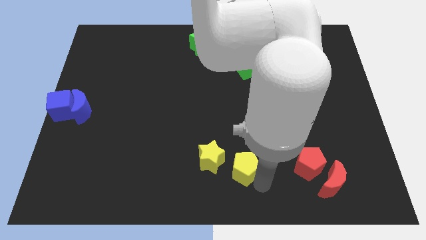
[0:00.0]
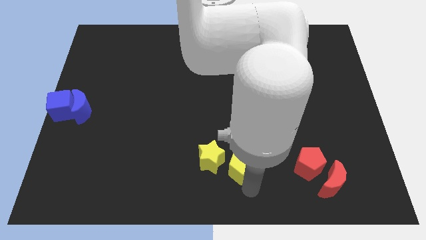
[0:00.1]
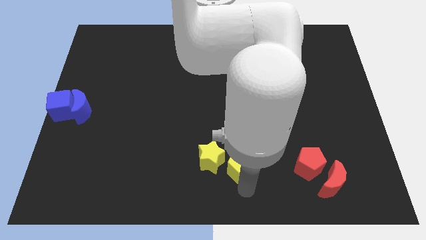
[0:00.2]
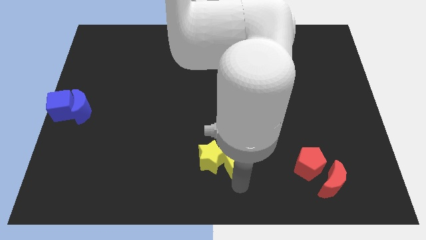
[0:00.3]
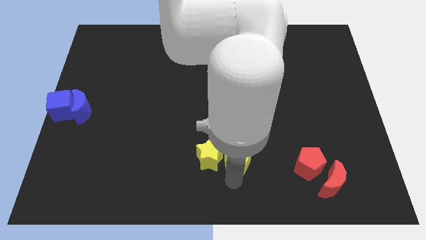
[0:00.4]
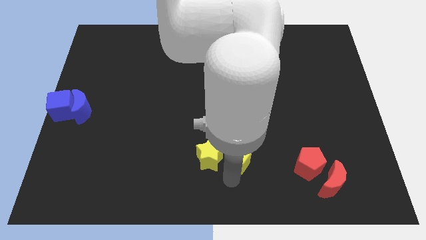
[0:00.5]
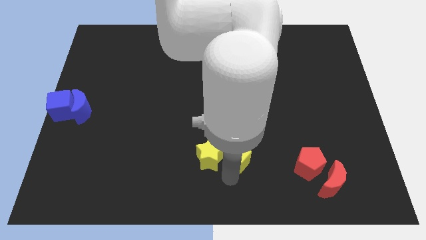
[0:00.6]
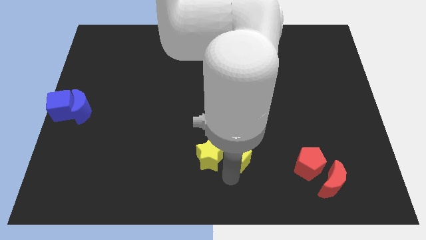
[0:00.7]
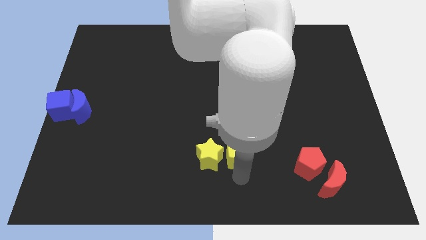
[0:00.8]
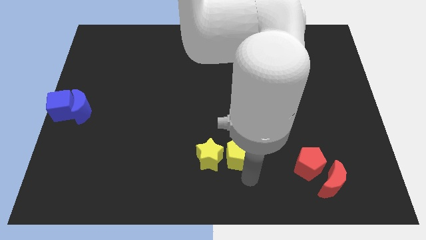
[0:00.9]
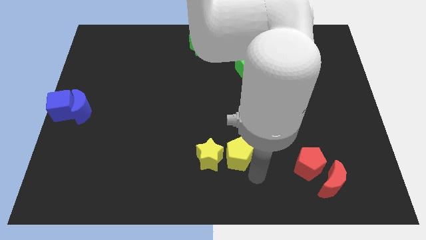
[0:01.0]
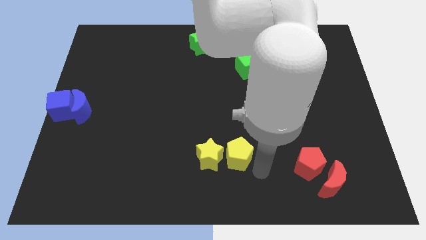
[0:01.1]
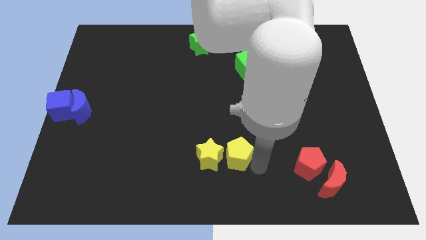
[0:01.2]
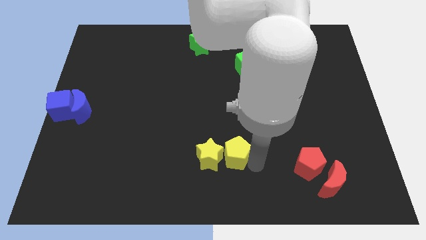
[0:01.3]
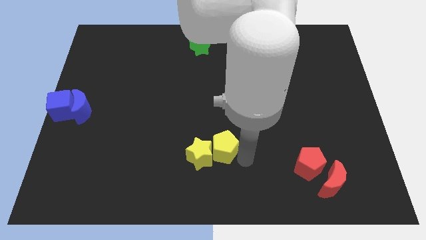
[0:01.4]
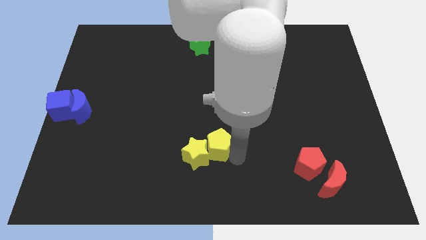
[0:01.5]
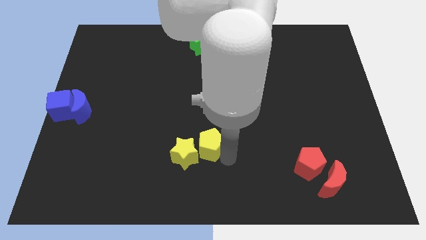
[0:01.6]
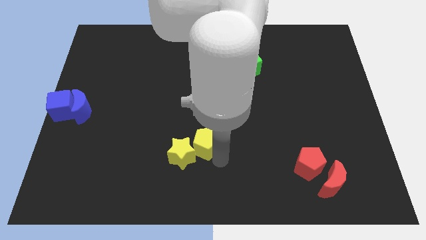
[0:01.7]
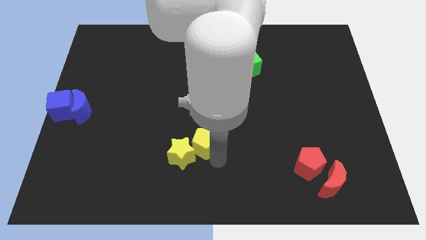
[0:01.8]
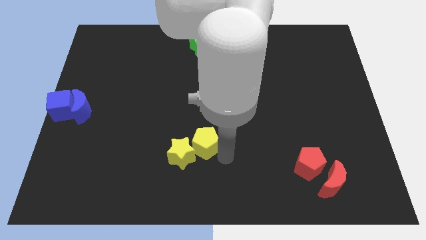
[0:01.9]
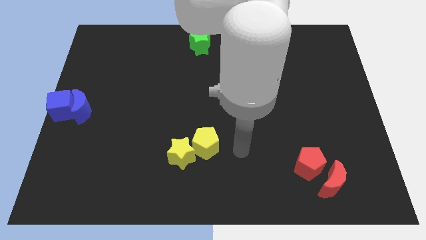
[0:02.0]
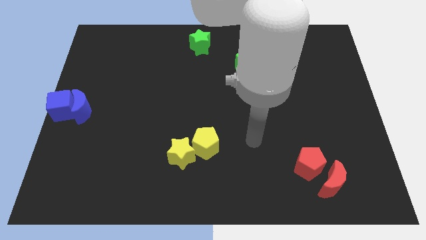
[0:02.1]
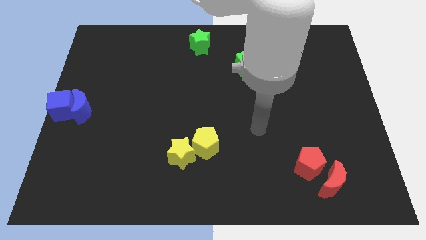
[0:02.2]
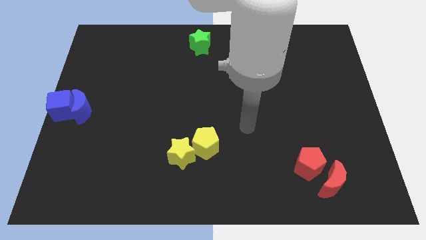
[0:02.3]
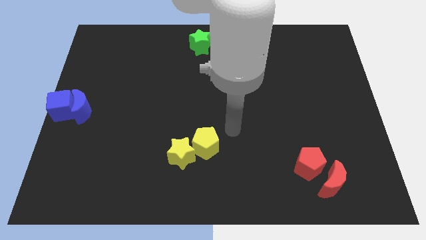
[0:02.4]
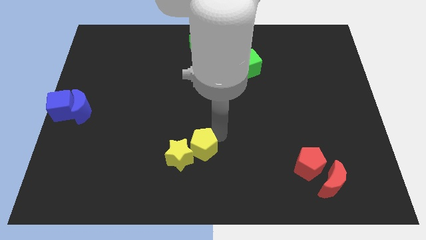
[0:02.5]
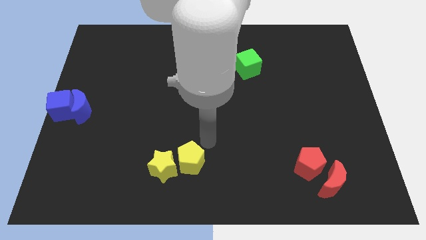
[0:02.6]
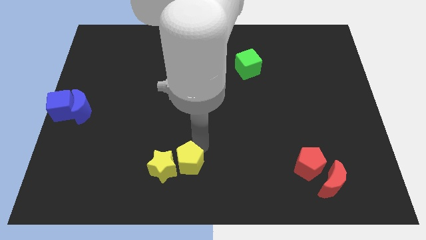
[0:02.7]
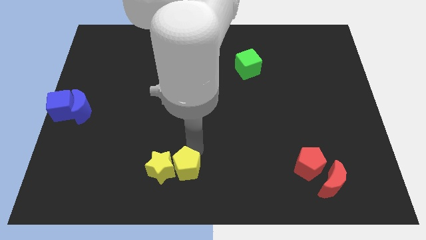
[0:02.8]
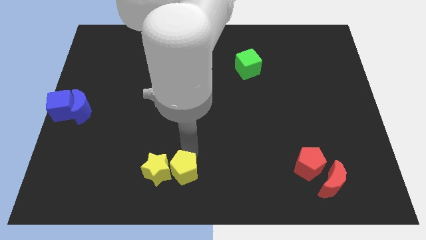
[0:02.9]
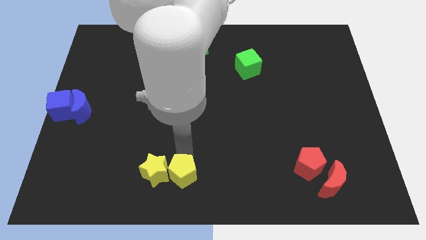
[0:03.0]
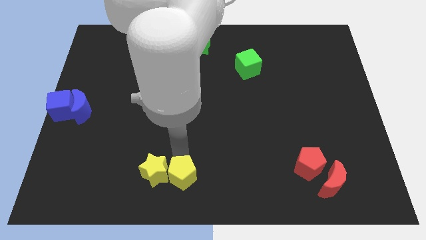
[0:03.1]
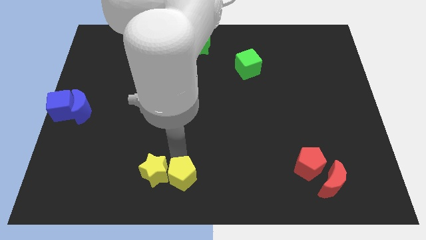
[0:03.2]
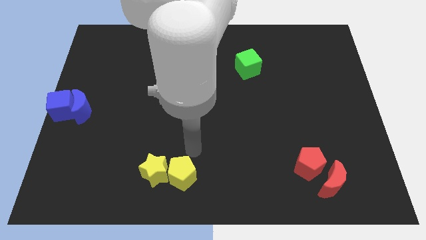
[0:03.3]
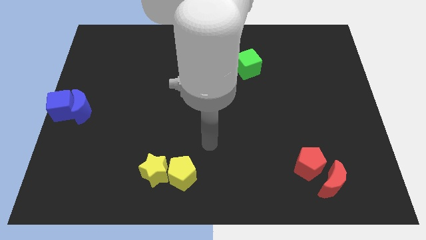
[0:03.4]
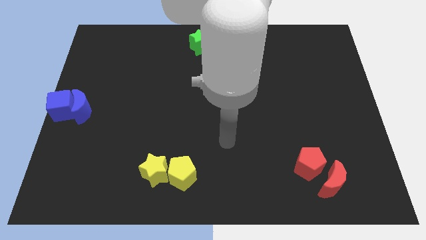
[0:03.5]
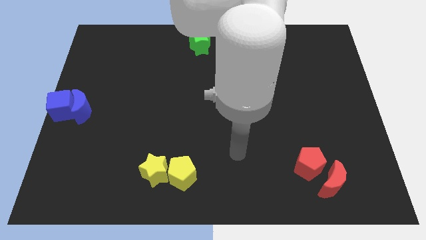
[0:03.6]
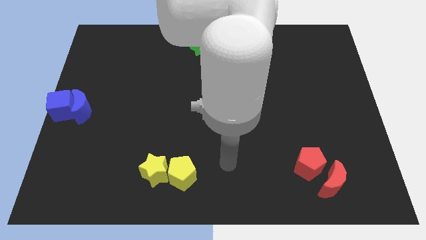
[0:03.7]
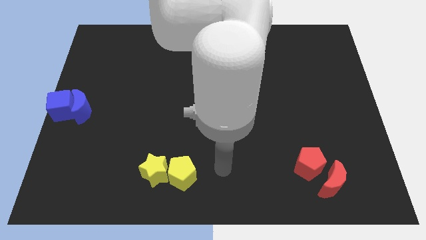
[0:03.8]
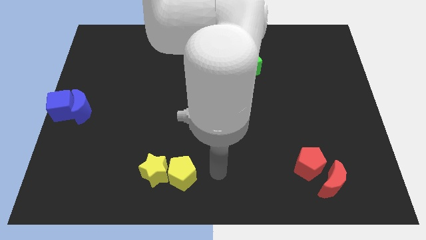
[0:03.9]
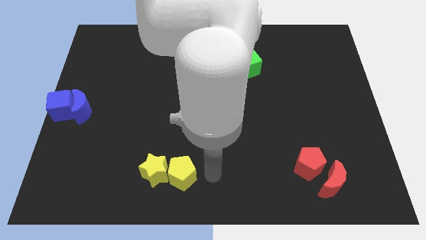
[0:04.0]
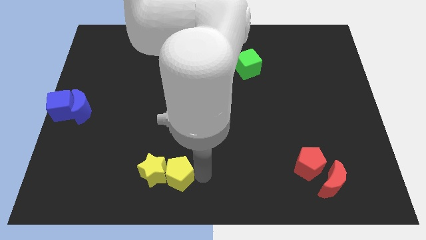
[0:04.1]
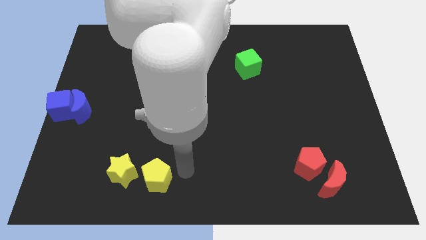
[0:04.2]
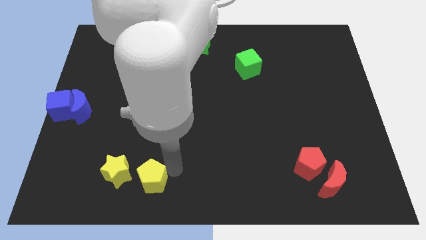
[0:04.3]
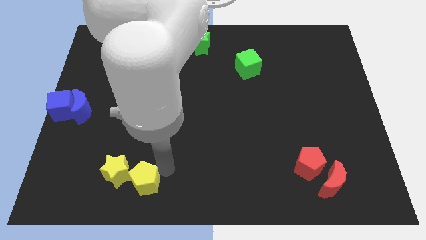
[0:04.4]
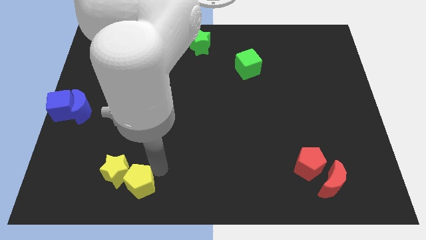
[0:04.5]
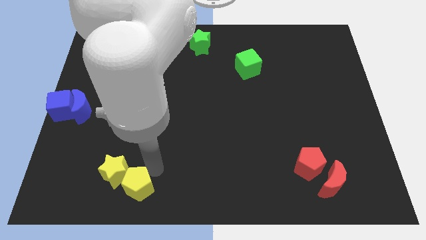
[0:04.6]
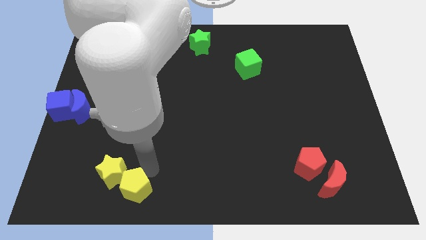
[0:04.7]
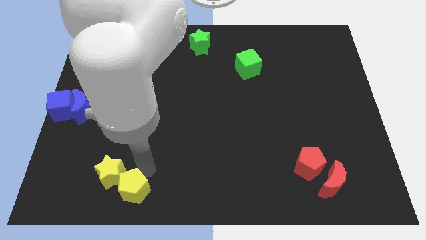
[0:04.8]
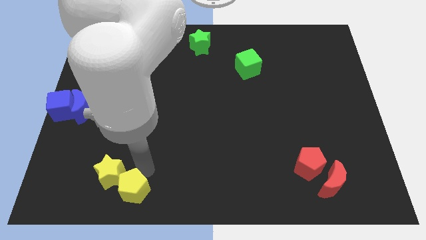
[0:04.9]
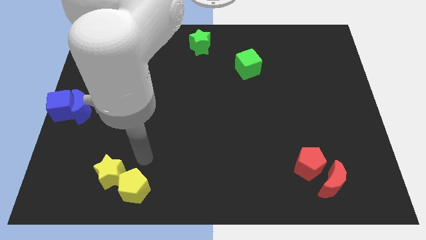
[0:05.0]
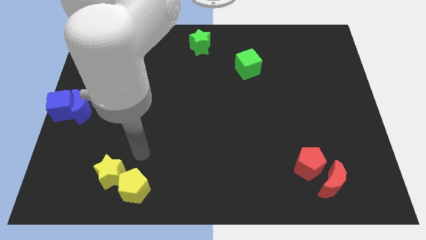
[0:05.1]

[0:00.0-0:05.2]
move the yellow blocks to the left of the board

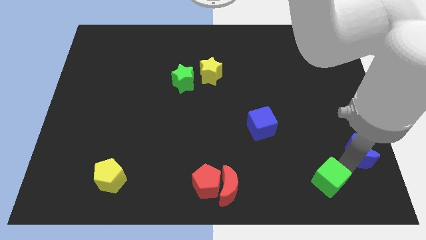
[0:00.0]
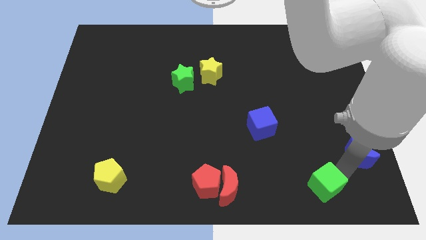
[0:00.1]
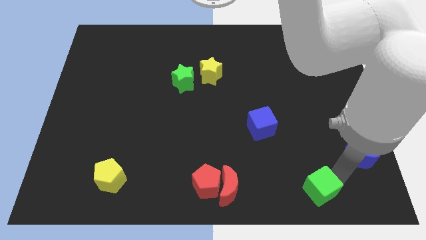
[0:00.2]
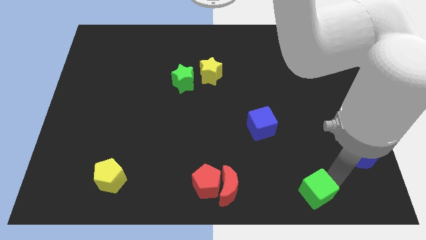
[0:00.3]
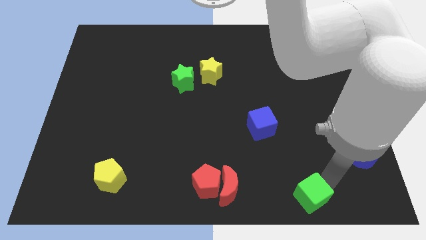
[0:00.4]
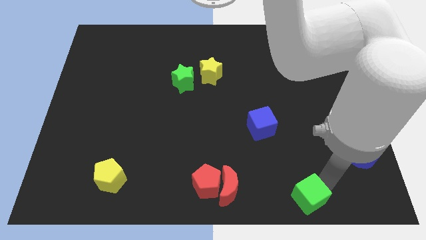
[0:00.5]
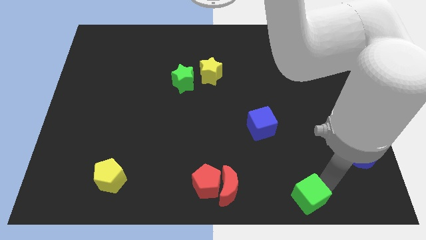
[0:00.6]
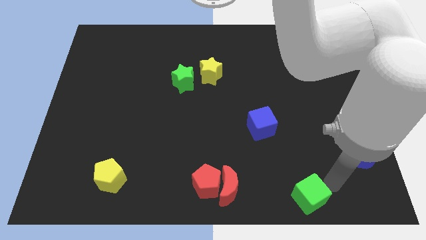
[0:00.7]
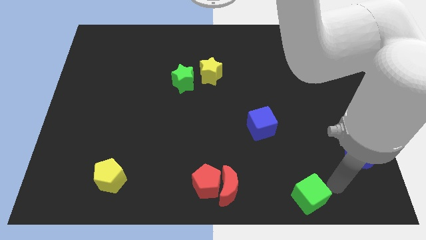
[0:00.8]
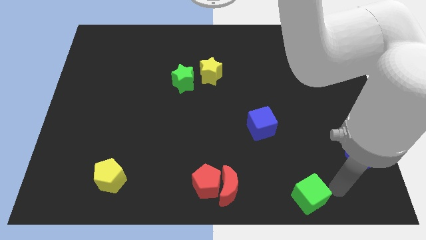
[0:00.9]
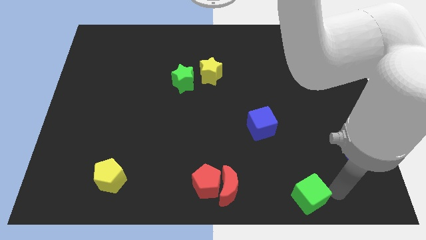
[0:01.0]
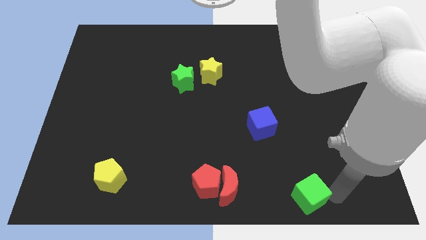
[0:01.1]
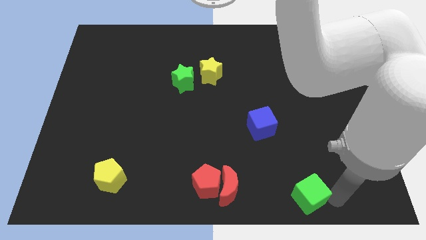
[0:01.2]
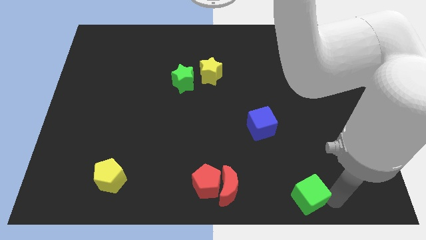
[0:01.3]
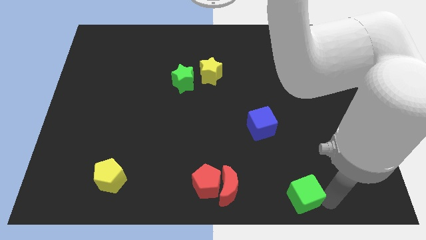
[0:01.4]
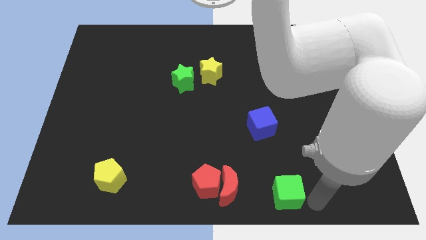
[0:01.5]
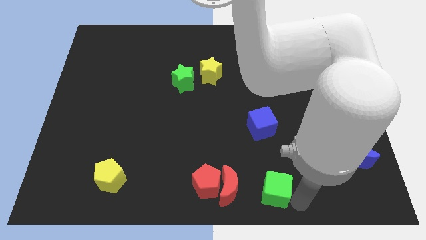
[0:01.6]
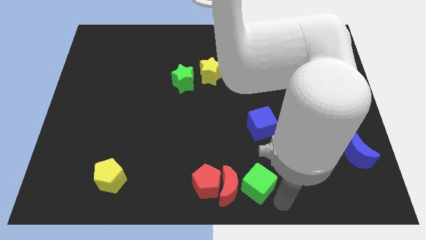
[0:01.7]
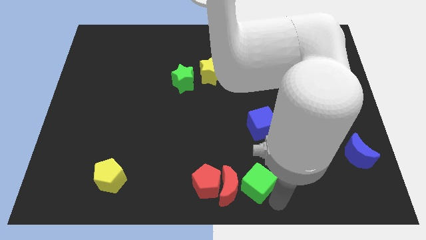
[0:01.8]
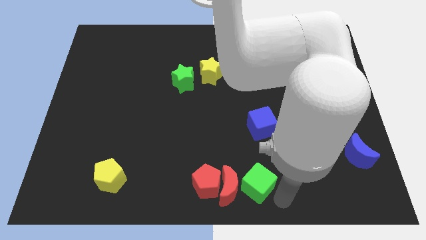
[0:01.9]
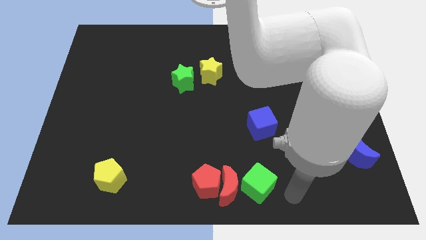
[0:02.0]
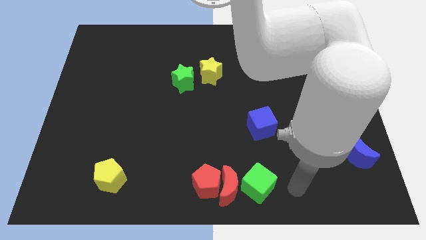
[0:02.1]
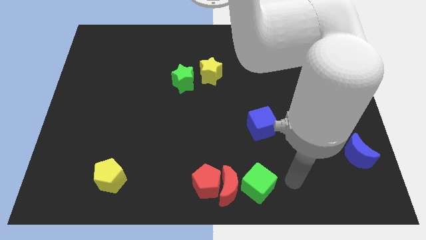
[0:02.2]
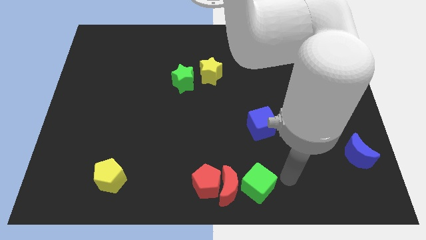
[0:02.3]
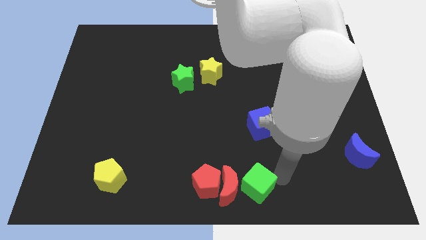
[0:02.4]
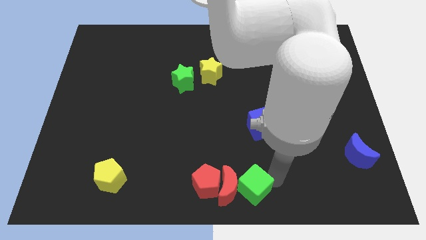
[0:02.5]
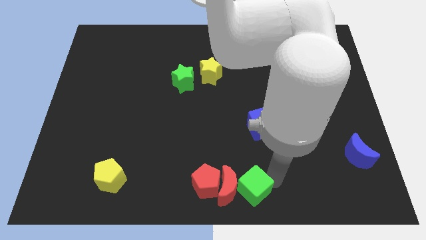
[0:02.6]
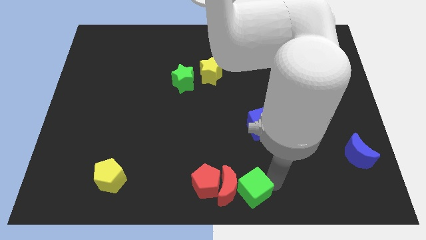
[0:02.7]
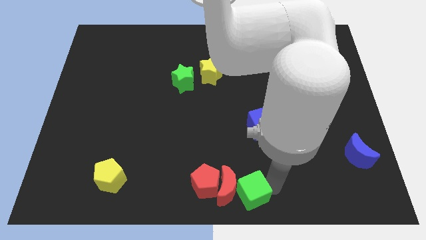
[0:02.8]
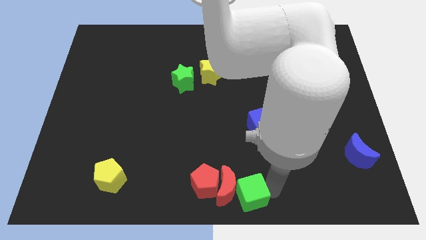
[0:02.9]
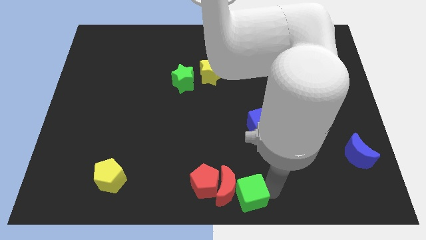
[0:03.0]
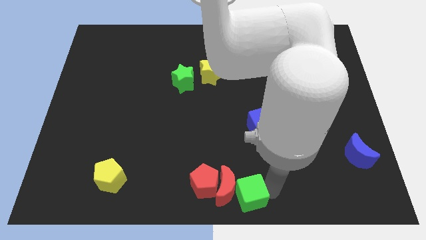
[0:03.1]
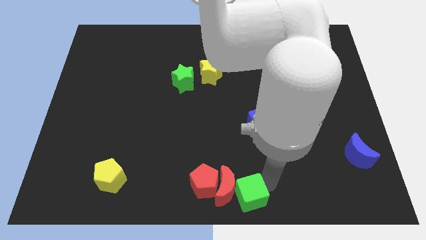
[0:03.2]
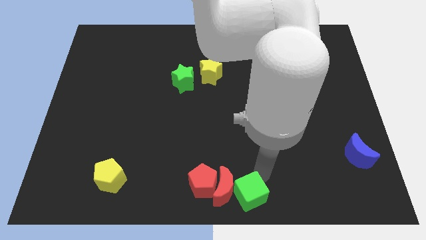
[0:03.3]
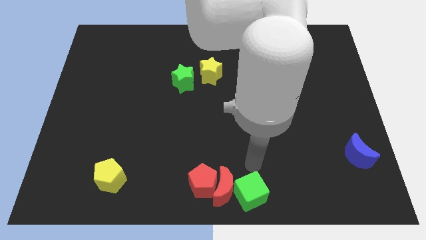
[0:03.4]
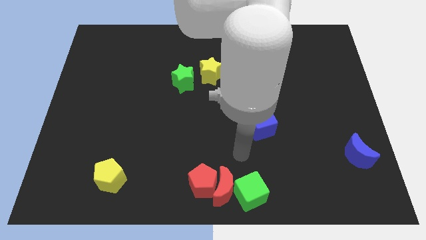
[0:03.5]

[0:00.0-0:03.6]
push the green cube towards the red crescent

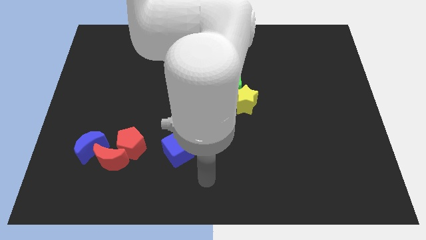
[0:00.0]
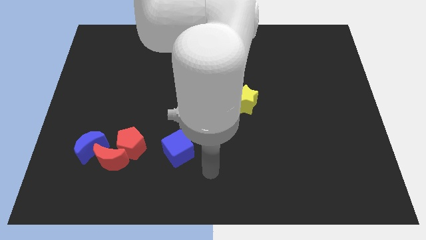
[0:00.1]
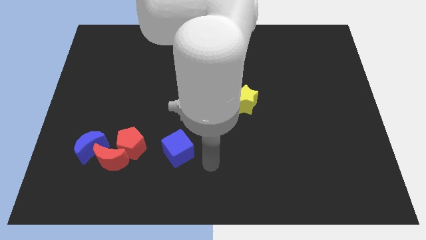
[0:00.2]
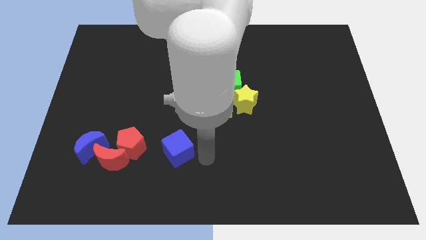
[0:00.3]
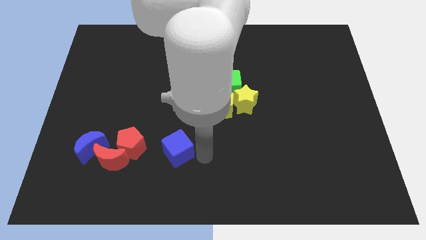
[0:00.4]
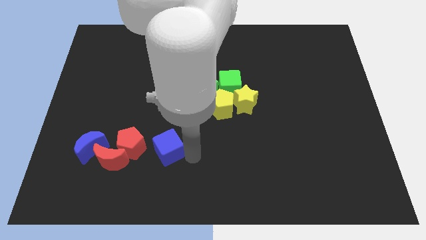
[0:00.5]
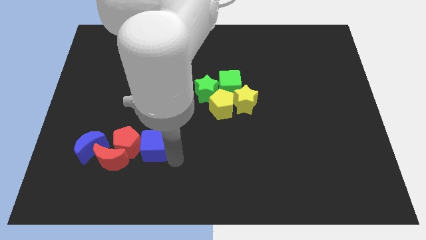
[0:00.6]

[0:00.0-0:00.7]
push the blue cube into the red pentagon
